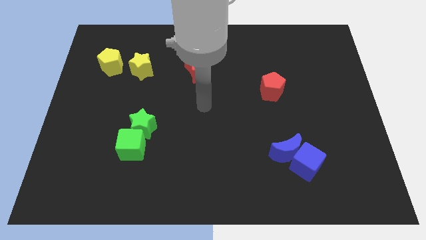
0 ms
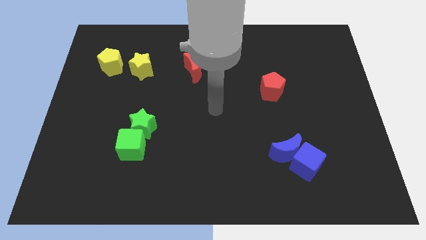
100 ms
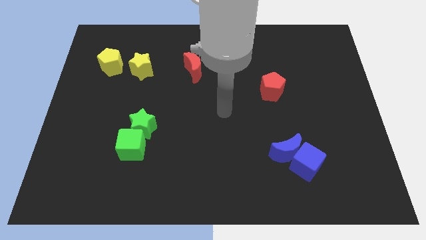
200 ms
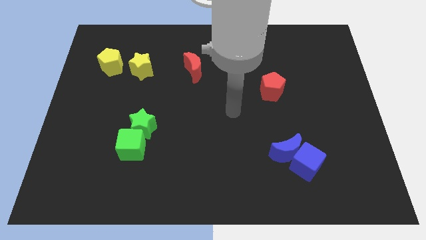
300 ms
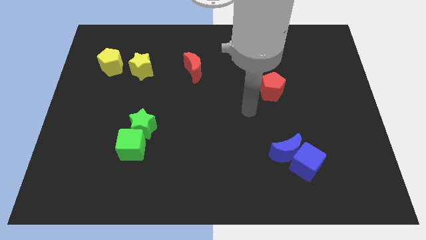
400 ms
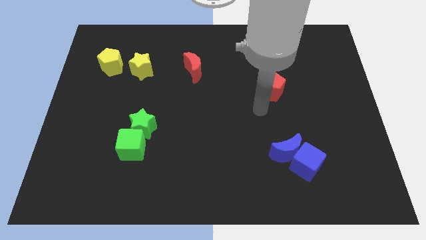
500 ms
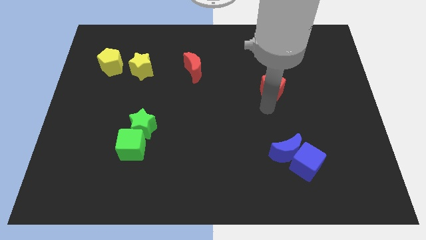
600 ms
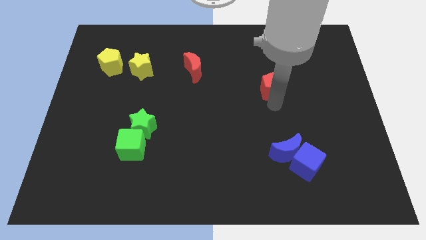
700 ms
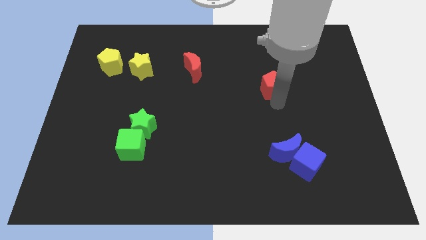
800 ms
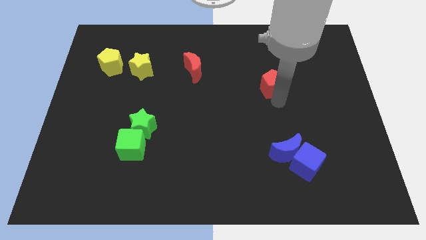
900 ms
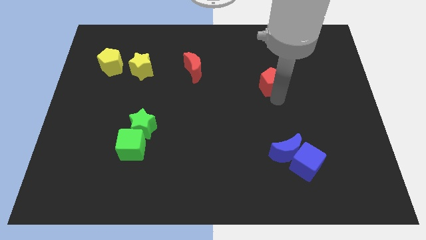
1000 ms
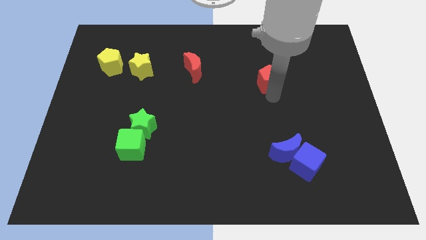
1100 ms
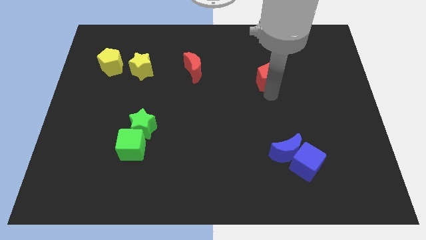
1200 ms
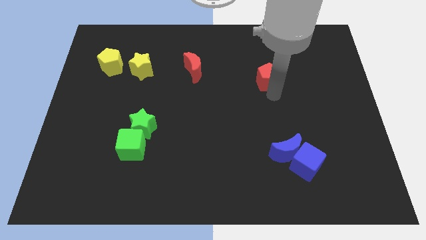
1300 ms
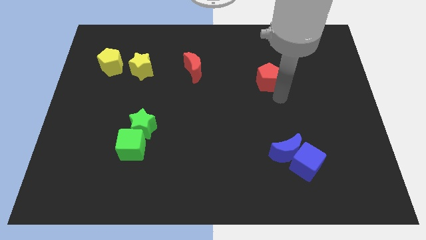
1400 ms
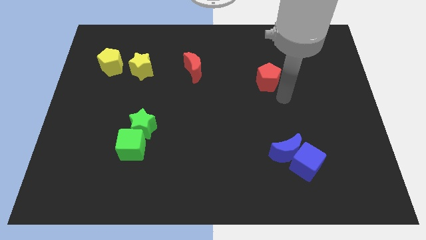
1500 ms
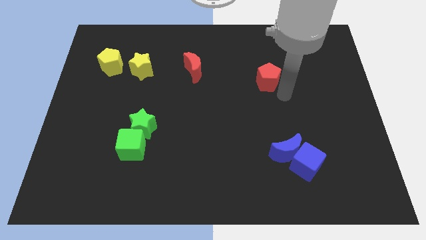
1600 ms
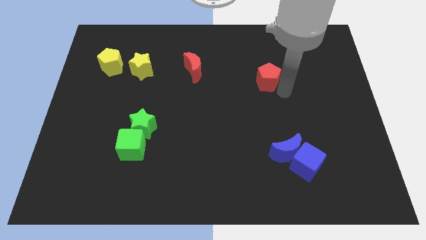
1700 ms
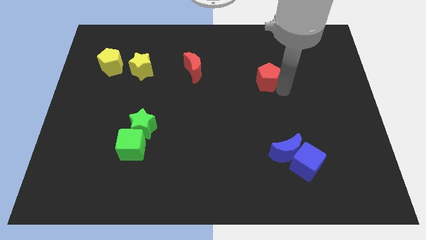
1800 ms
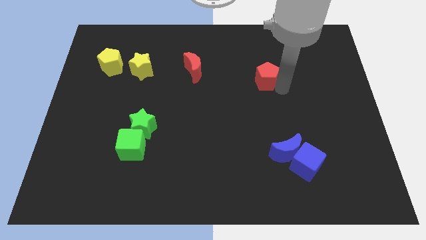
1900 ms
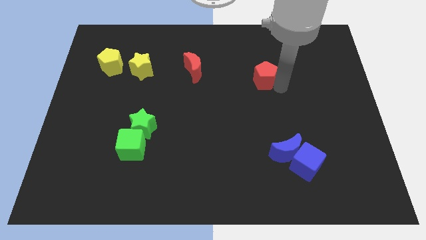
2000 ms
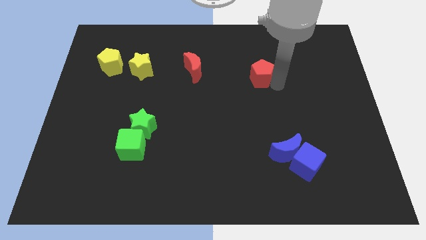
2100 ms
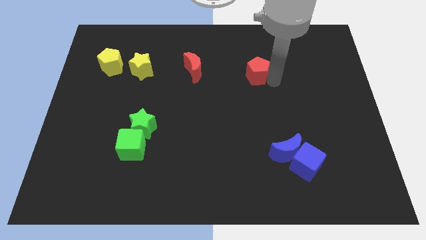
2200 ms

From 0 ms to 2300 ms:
move the red pentagon towards top center

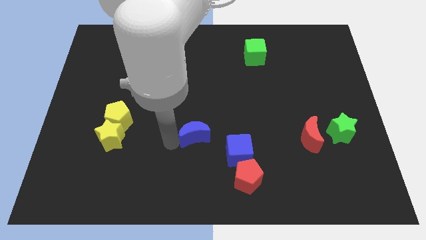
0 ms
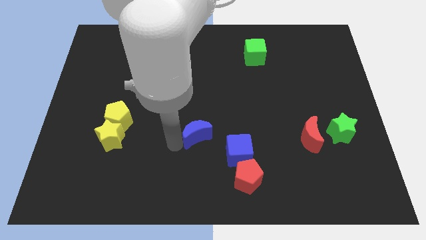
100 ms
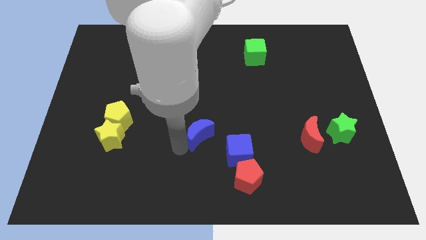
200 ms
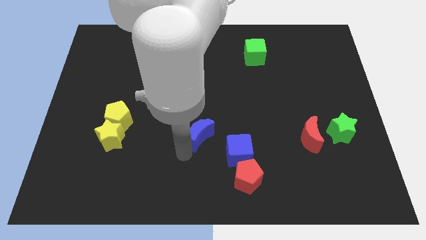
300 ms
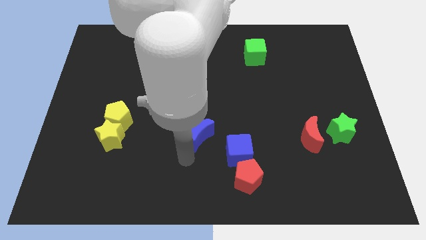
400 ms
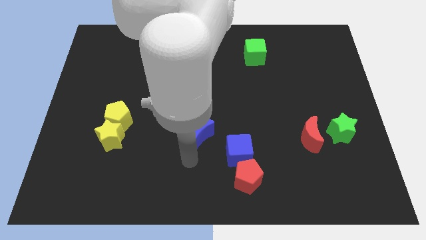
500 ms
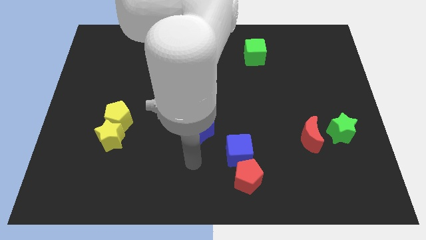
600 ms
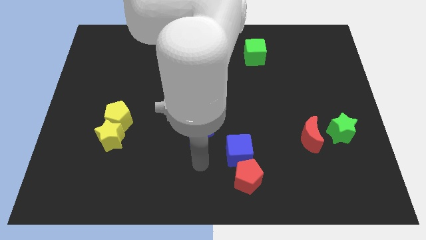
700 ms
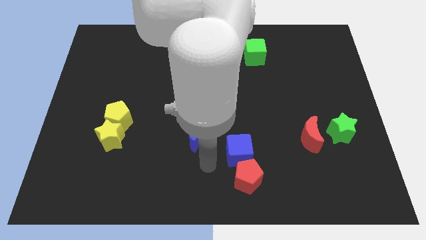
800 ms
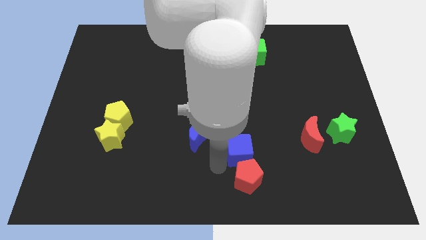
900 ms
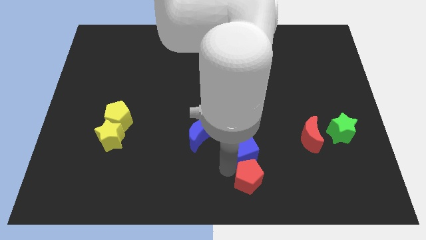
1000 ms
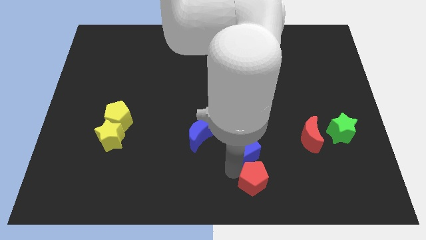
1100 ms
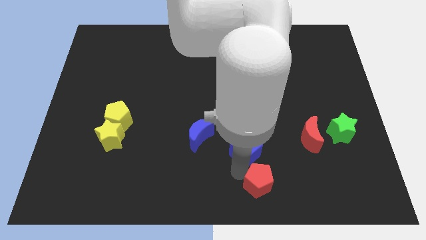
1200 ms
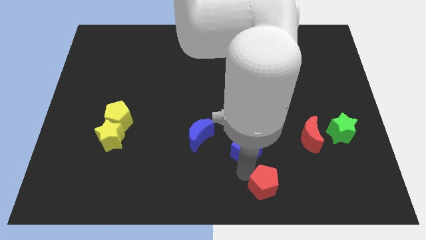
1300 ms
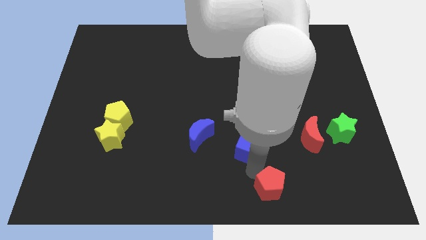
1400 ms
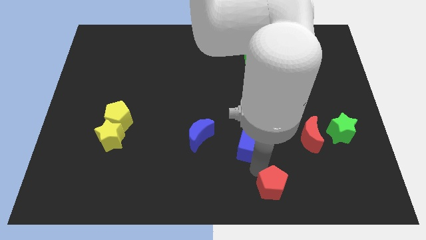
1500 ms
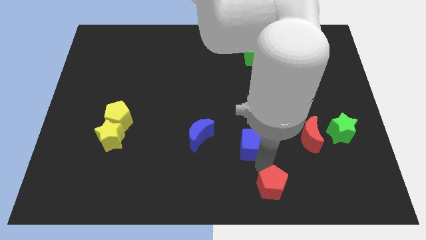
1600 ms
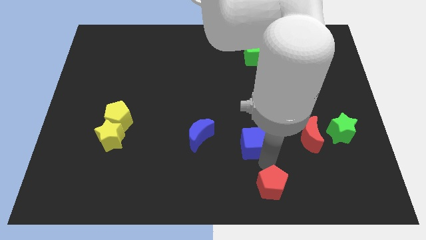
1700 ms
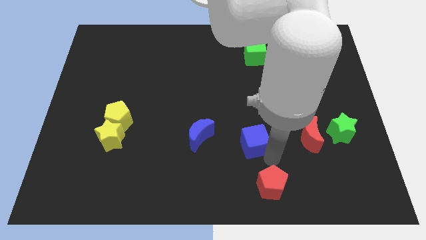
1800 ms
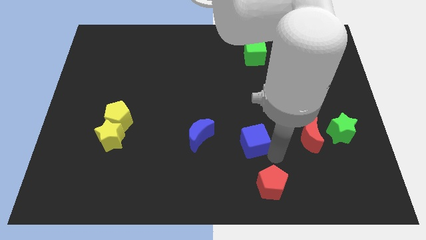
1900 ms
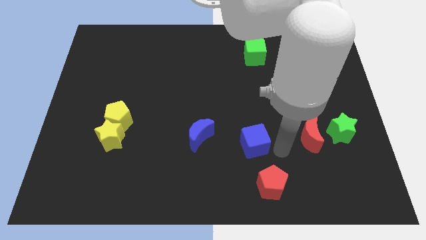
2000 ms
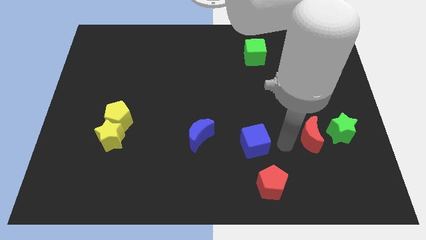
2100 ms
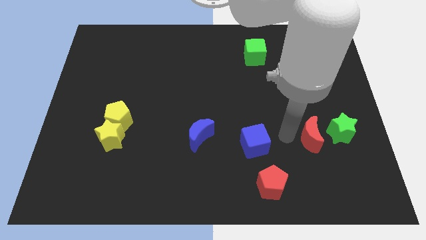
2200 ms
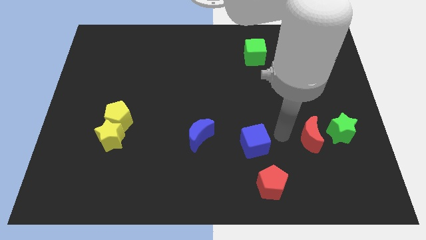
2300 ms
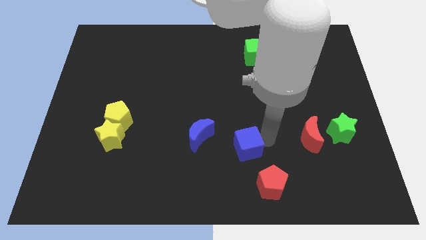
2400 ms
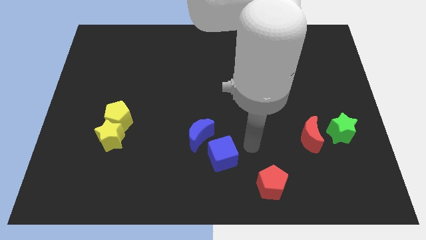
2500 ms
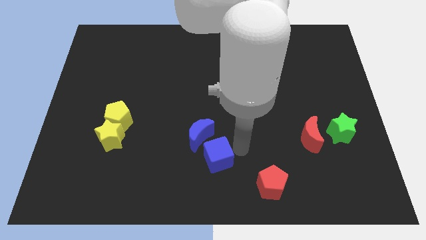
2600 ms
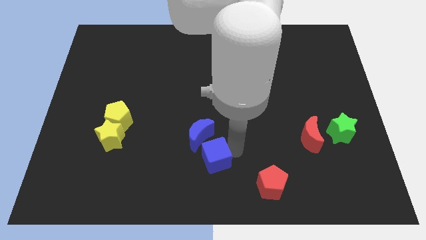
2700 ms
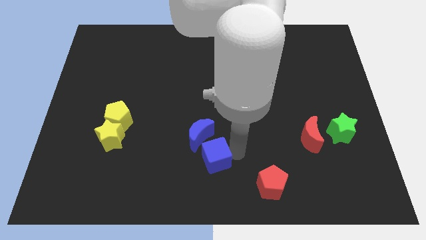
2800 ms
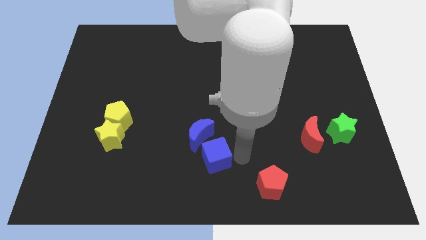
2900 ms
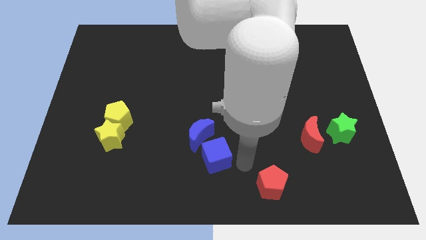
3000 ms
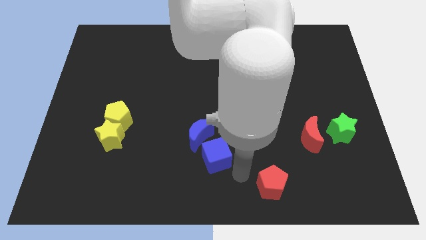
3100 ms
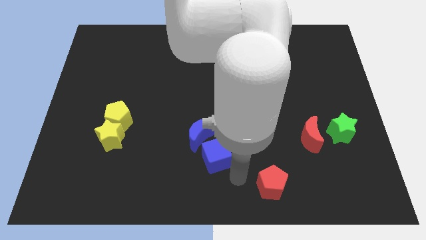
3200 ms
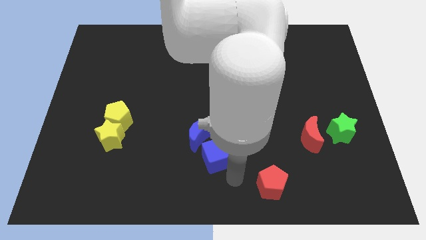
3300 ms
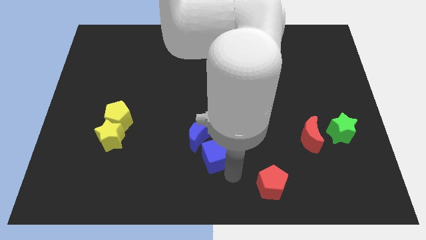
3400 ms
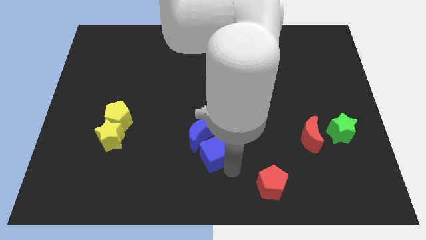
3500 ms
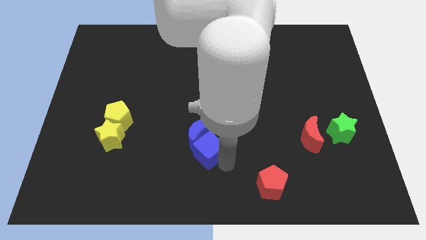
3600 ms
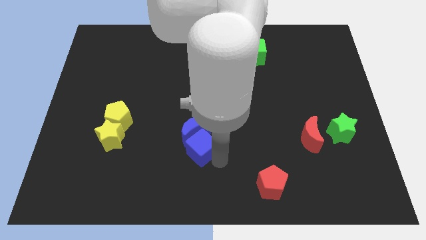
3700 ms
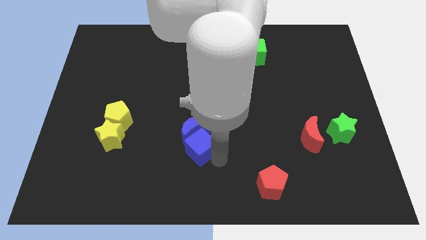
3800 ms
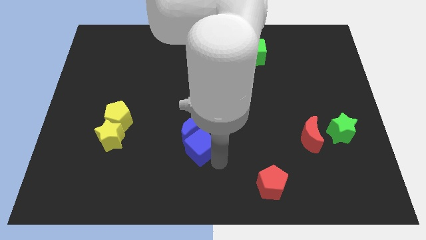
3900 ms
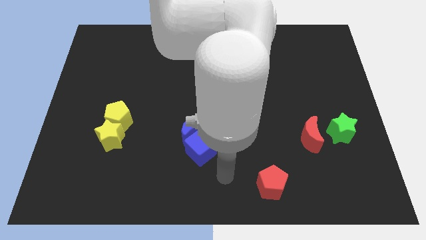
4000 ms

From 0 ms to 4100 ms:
move the blue cube and moon slightly left

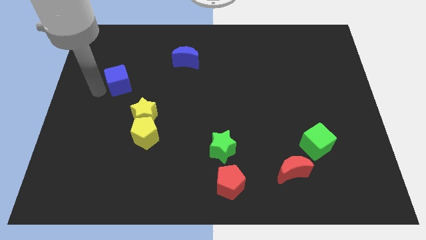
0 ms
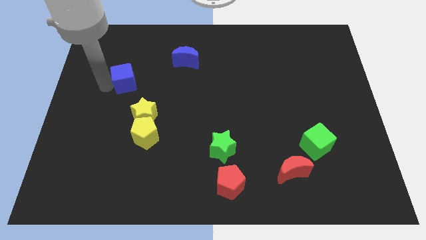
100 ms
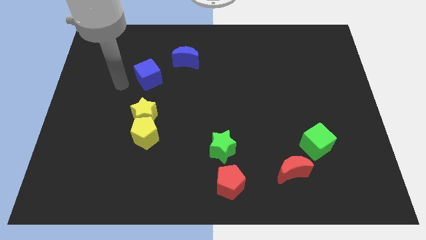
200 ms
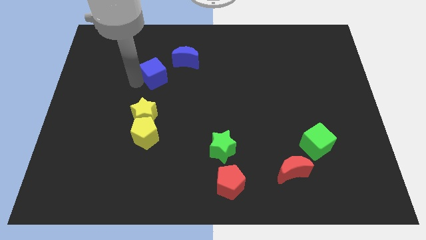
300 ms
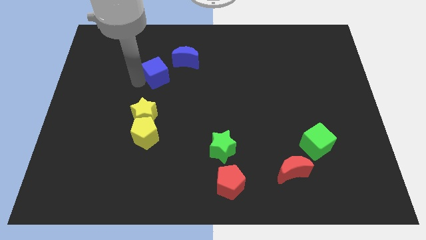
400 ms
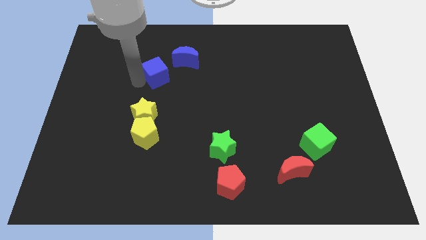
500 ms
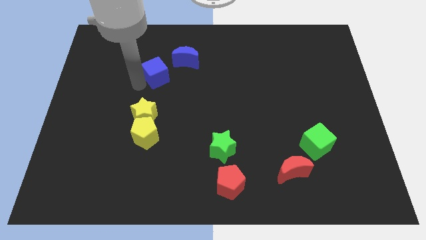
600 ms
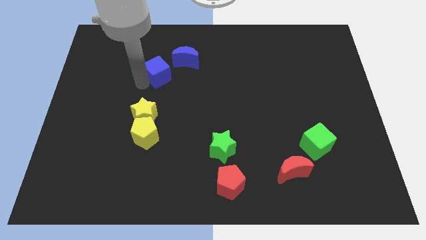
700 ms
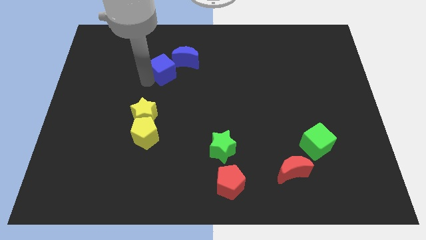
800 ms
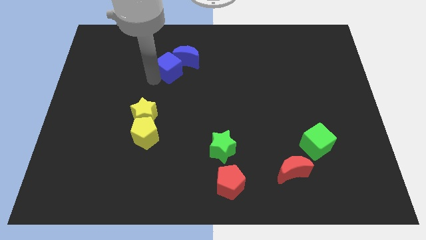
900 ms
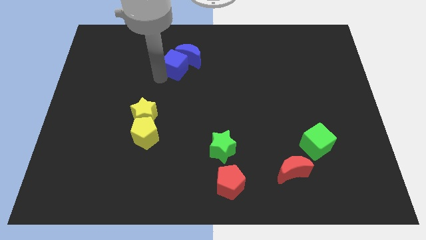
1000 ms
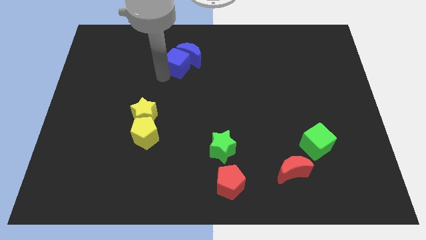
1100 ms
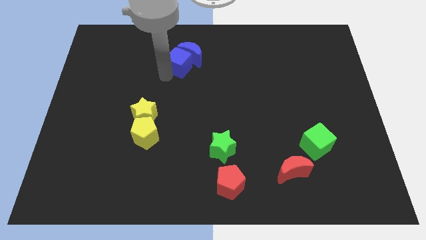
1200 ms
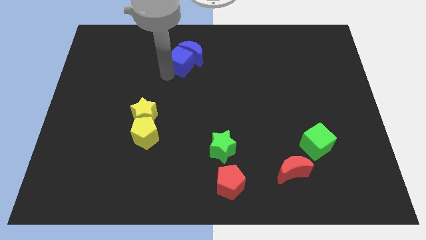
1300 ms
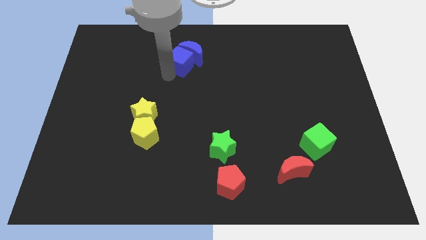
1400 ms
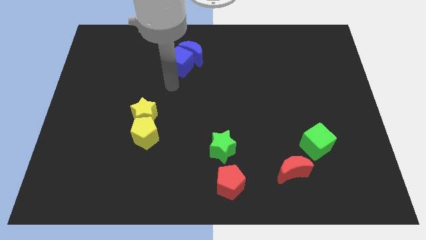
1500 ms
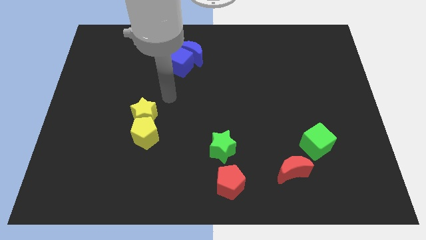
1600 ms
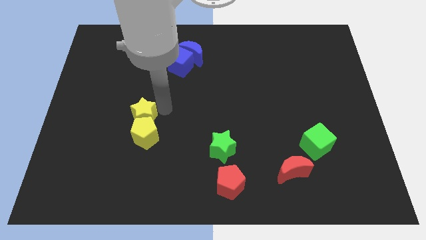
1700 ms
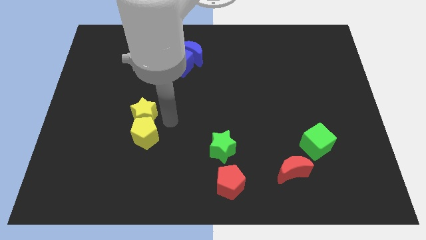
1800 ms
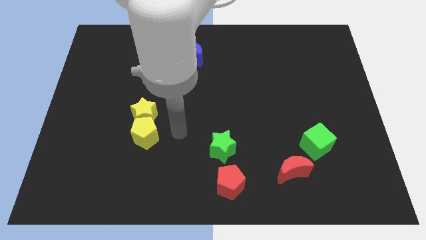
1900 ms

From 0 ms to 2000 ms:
move the blue cube to the bottom of blue crescent

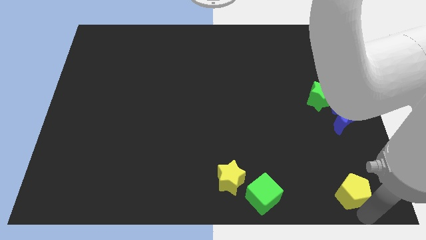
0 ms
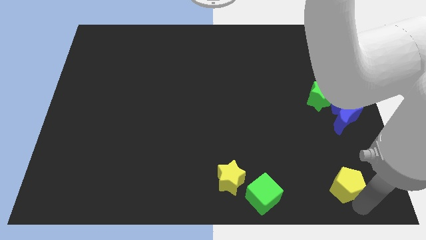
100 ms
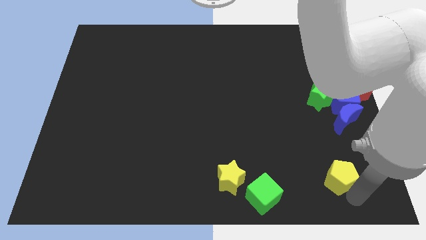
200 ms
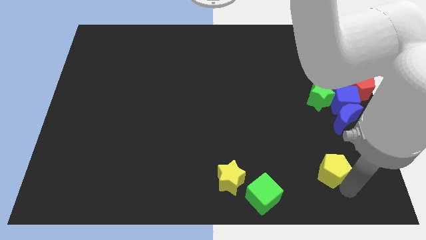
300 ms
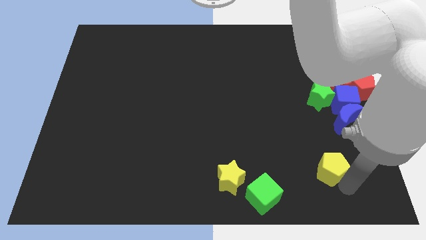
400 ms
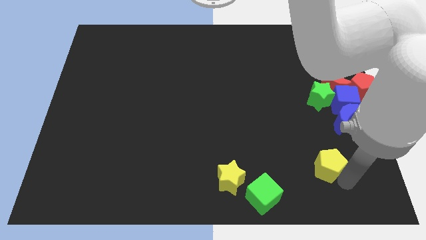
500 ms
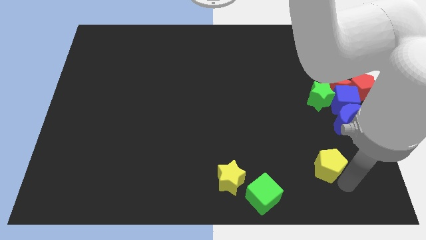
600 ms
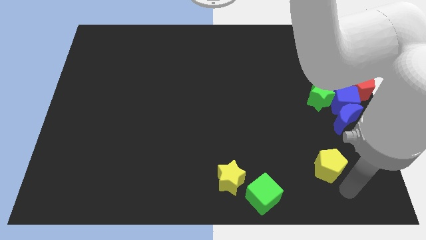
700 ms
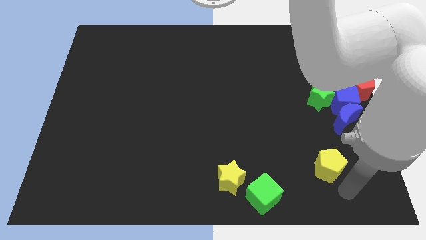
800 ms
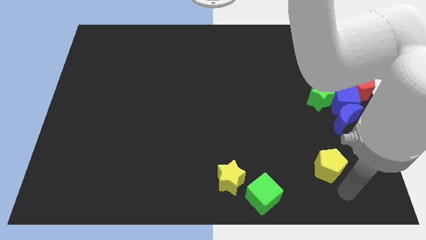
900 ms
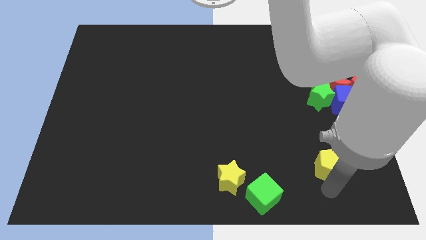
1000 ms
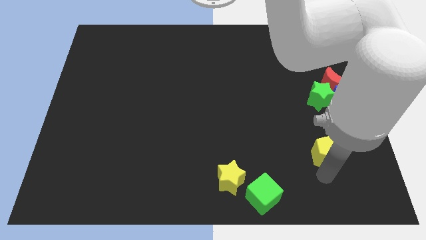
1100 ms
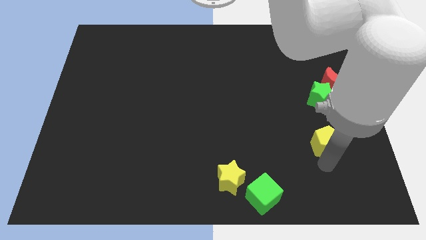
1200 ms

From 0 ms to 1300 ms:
push the yellow pentagon slightly upwards
